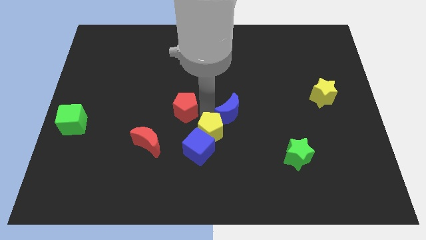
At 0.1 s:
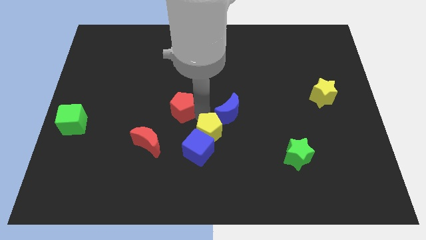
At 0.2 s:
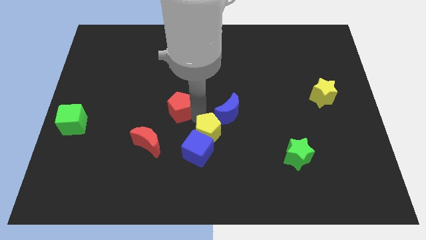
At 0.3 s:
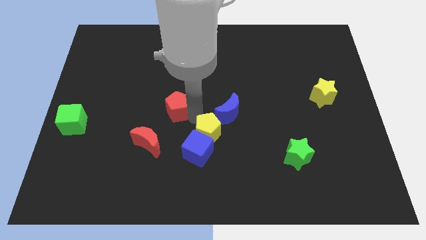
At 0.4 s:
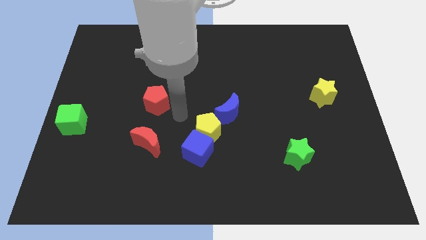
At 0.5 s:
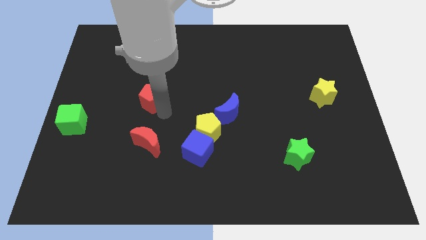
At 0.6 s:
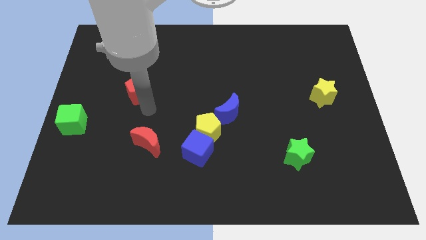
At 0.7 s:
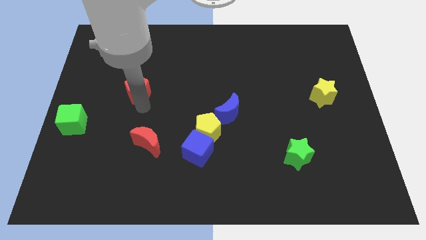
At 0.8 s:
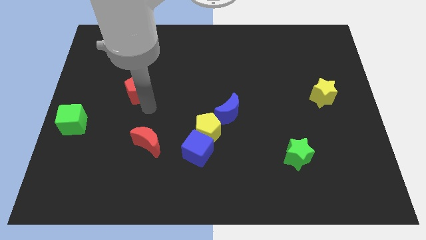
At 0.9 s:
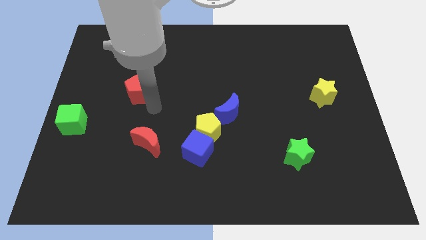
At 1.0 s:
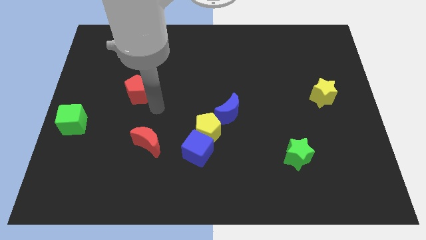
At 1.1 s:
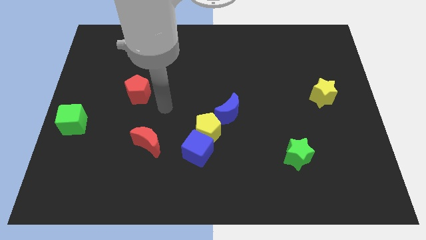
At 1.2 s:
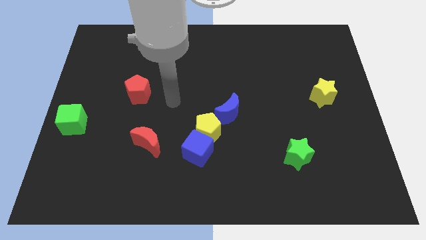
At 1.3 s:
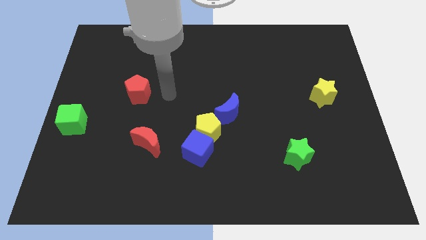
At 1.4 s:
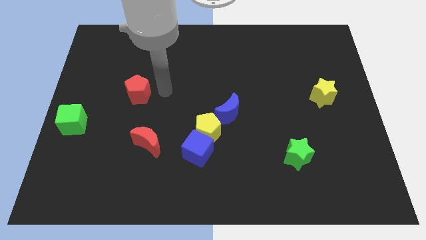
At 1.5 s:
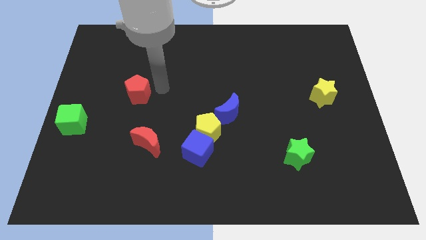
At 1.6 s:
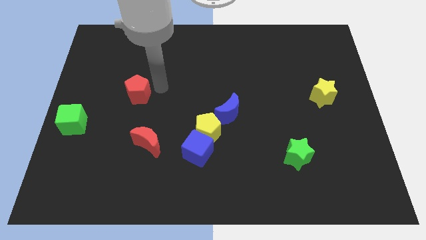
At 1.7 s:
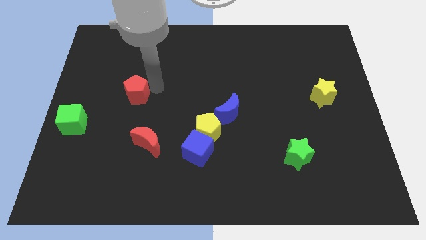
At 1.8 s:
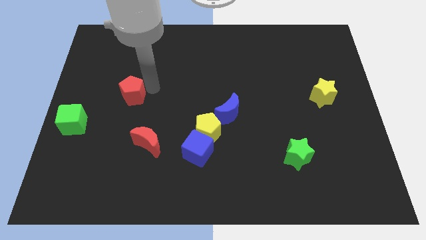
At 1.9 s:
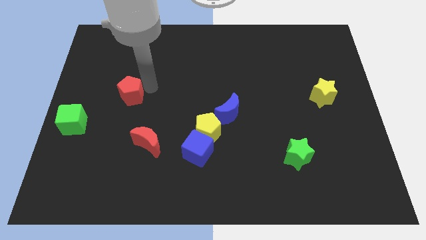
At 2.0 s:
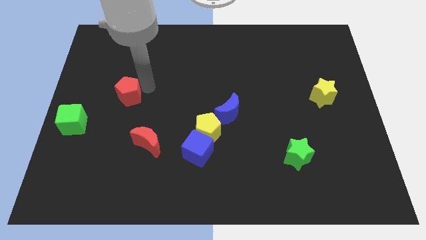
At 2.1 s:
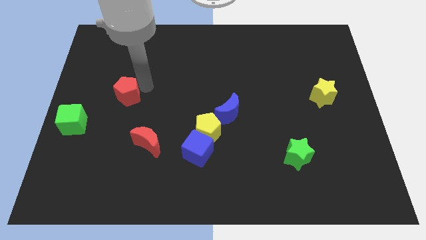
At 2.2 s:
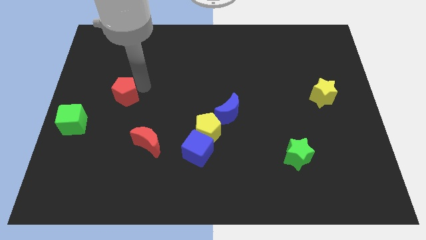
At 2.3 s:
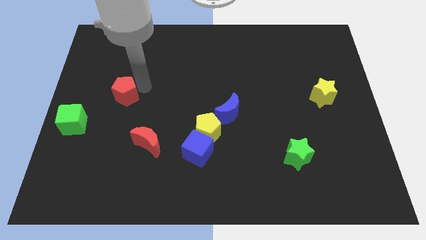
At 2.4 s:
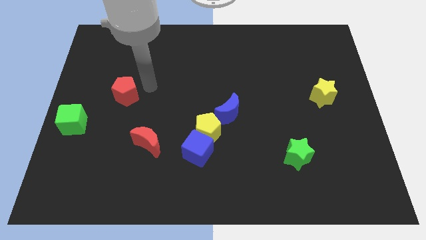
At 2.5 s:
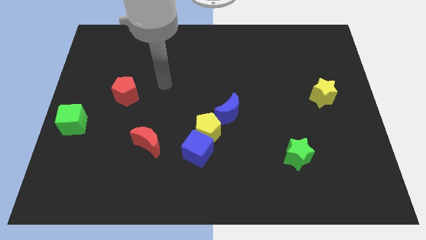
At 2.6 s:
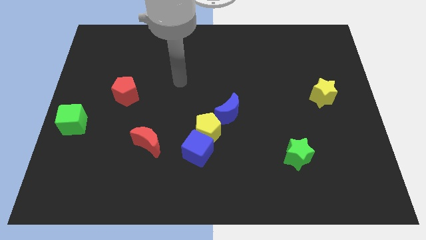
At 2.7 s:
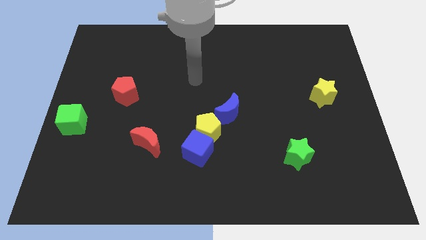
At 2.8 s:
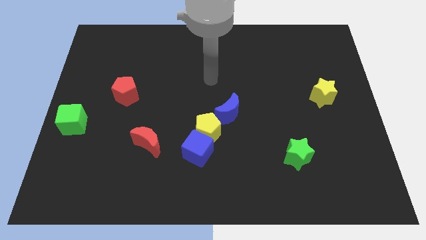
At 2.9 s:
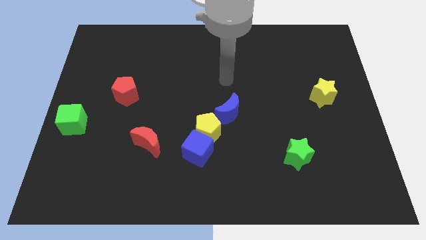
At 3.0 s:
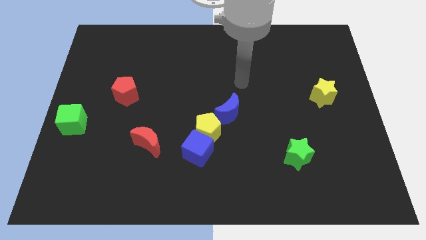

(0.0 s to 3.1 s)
slide red pentagon to top right of green cube

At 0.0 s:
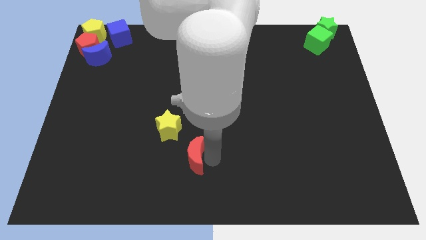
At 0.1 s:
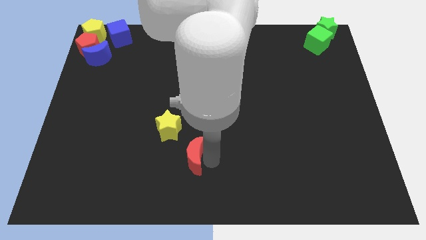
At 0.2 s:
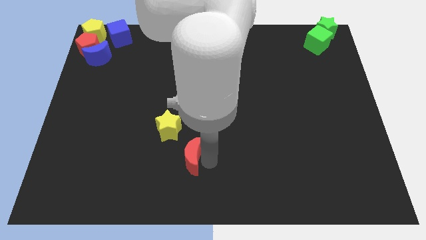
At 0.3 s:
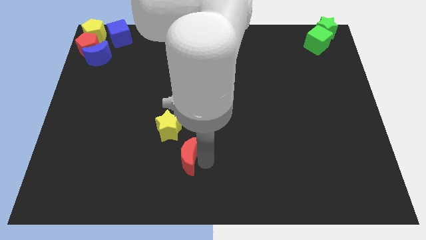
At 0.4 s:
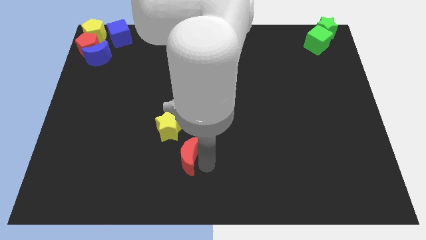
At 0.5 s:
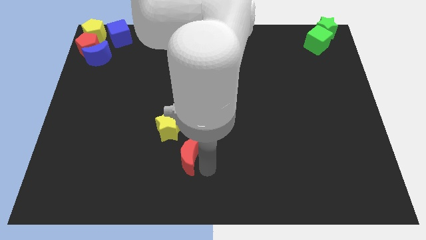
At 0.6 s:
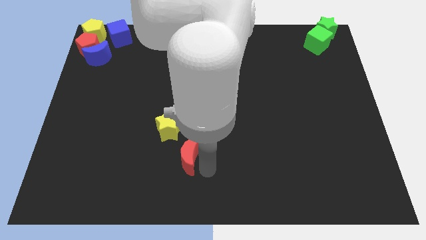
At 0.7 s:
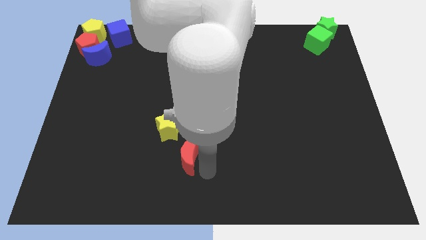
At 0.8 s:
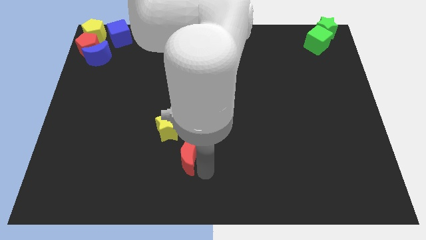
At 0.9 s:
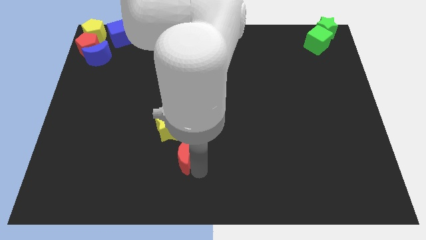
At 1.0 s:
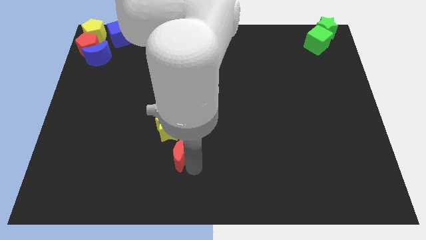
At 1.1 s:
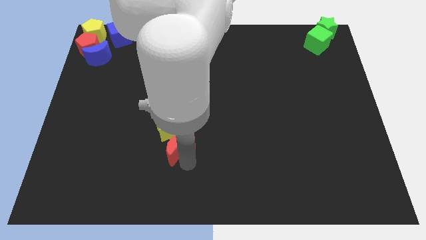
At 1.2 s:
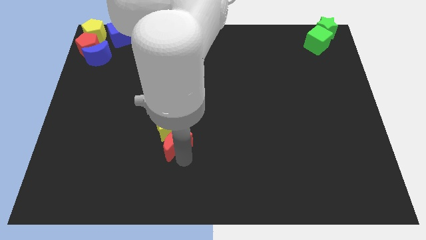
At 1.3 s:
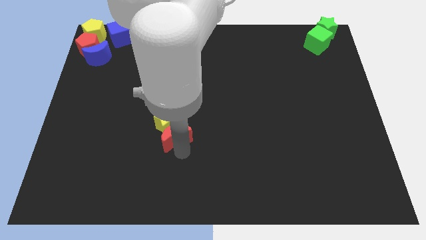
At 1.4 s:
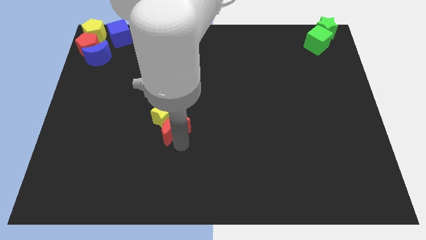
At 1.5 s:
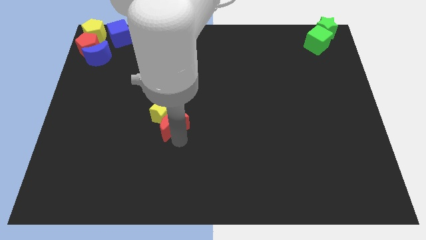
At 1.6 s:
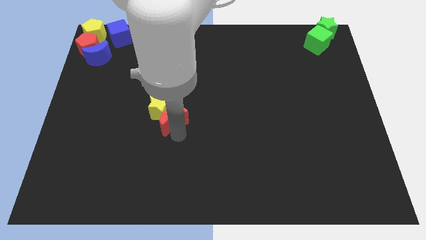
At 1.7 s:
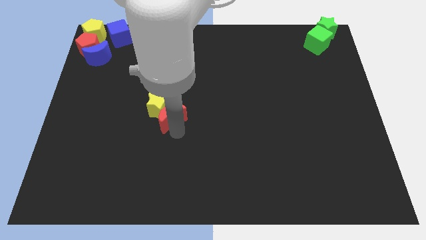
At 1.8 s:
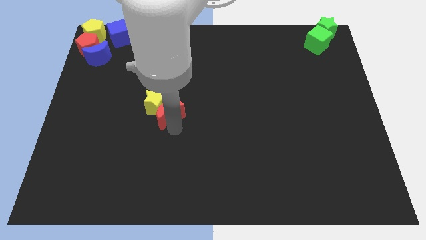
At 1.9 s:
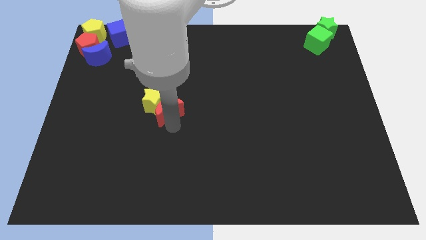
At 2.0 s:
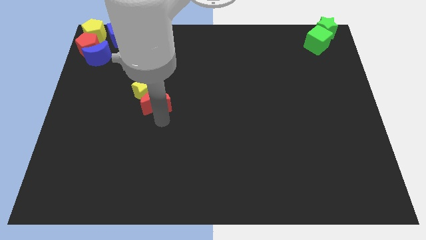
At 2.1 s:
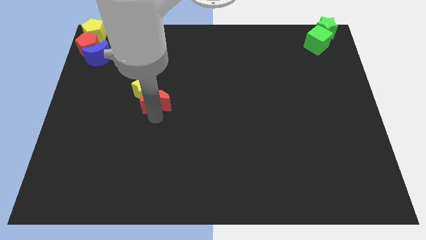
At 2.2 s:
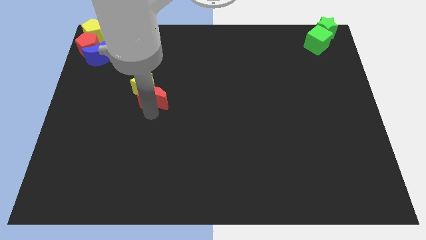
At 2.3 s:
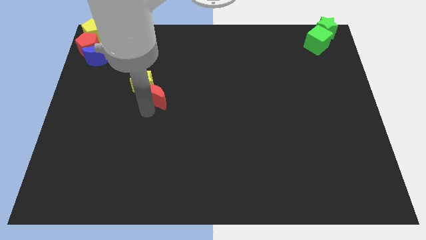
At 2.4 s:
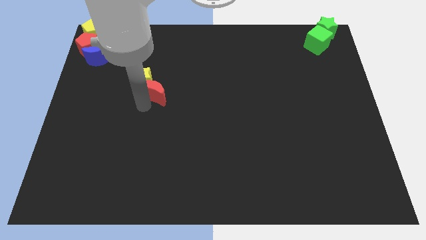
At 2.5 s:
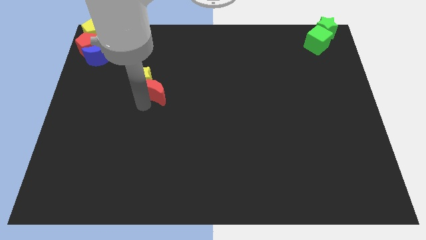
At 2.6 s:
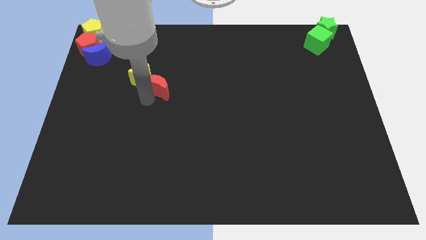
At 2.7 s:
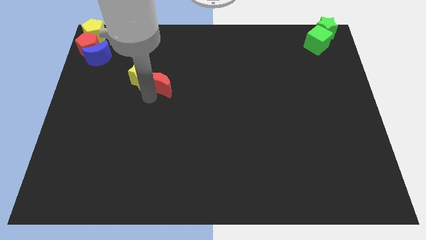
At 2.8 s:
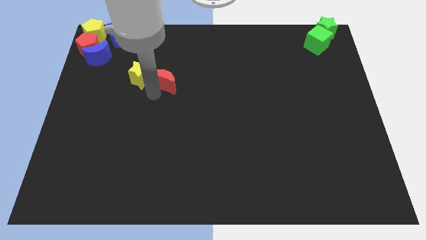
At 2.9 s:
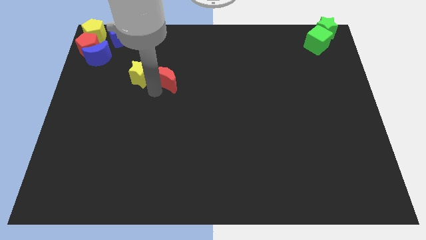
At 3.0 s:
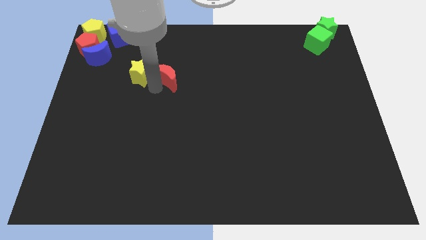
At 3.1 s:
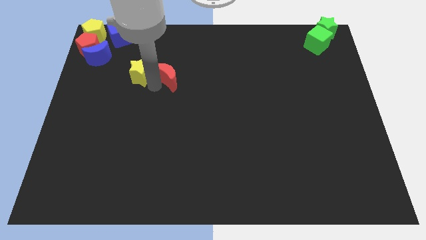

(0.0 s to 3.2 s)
move the red crescent and yellow star towards the group of blocks

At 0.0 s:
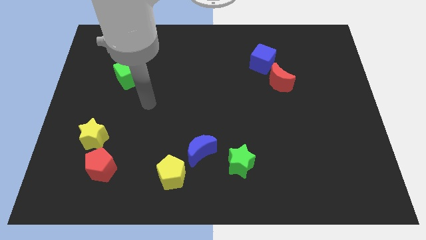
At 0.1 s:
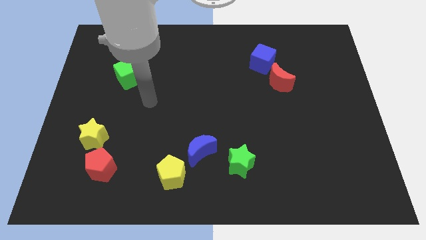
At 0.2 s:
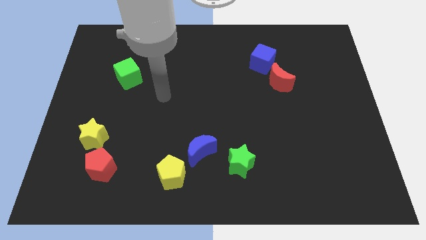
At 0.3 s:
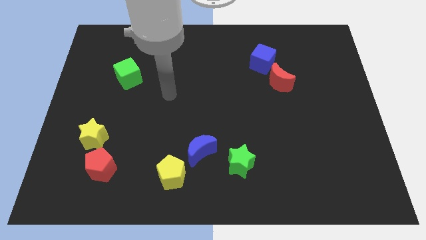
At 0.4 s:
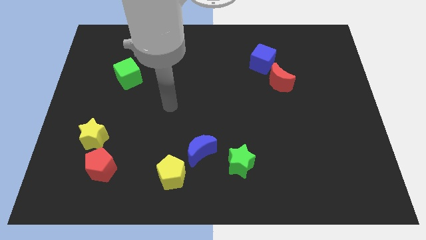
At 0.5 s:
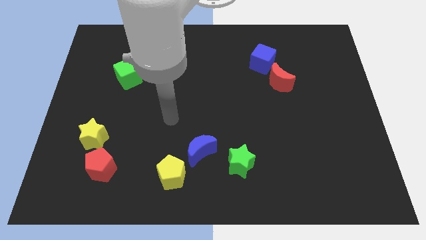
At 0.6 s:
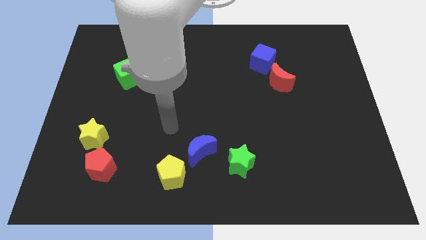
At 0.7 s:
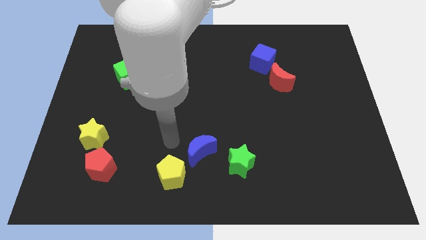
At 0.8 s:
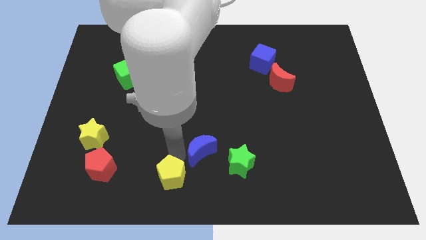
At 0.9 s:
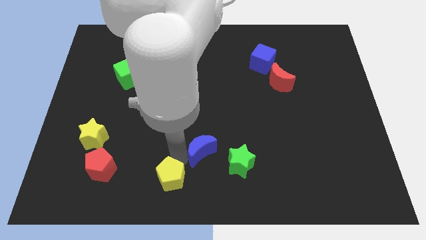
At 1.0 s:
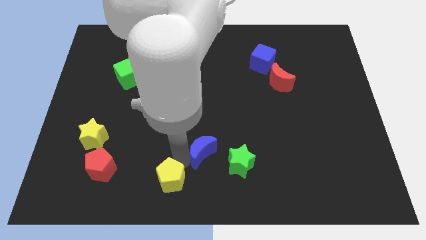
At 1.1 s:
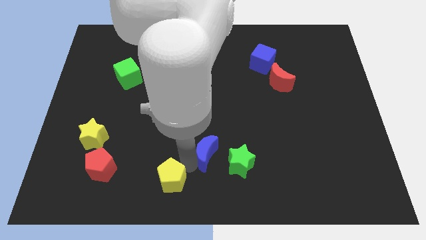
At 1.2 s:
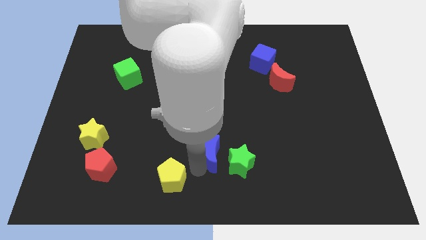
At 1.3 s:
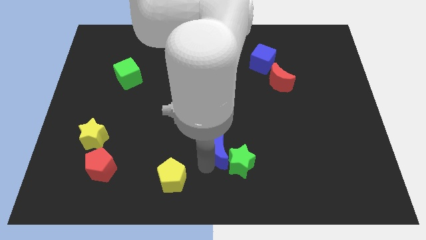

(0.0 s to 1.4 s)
slide the blue moon towards the right

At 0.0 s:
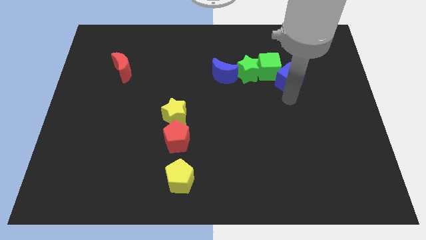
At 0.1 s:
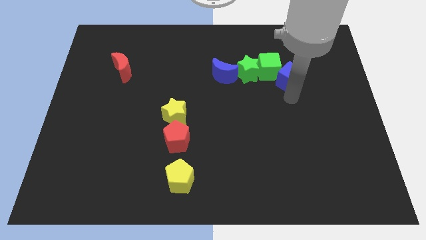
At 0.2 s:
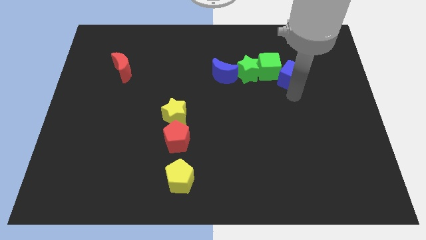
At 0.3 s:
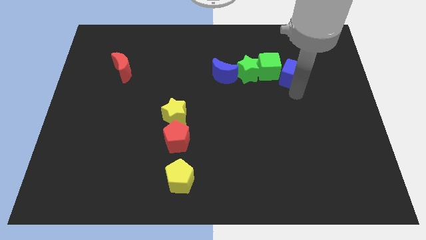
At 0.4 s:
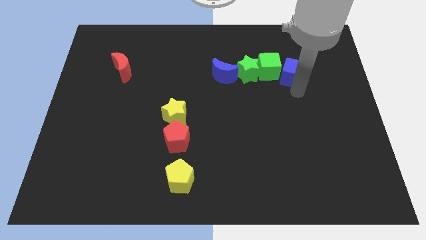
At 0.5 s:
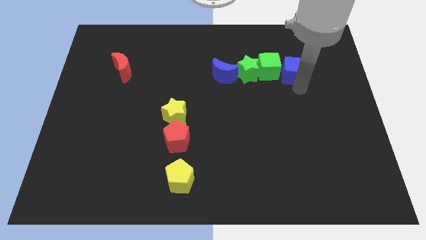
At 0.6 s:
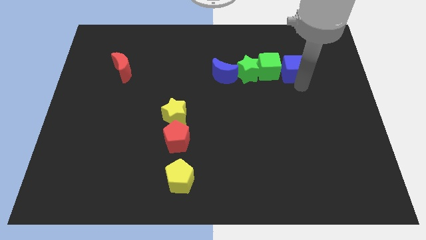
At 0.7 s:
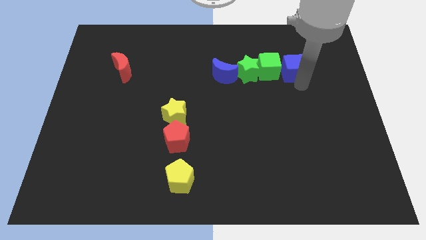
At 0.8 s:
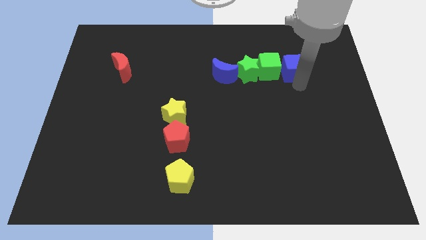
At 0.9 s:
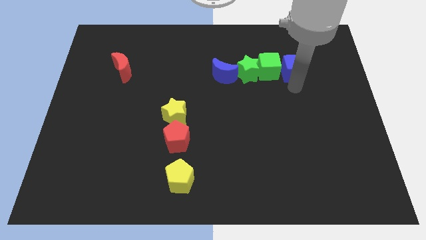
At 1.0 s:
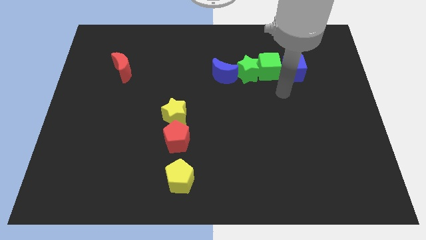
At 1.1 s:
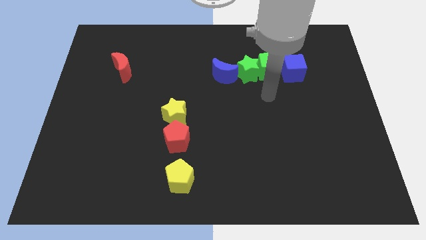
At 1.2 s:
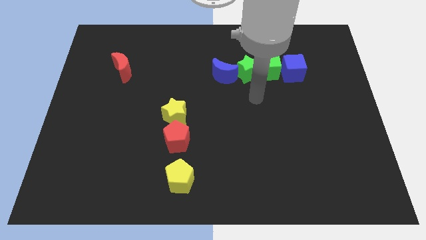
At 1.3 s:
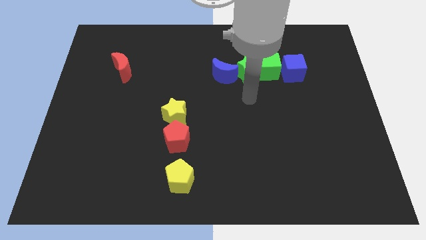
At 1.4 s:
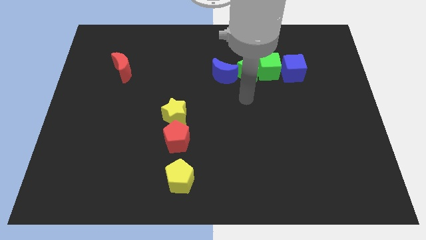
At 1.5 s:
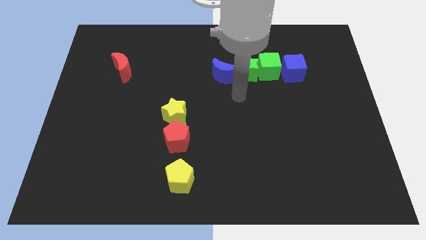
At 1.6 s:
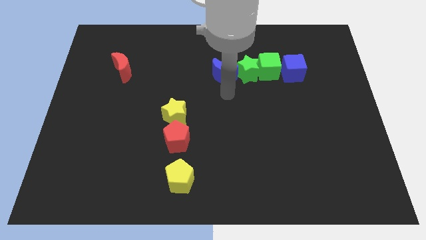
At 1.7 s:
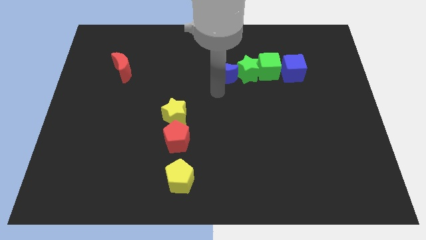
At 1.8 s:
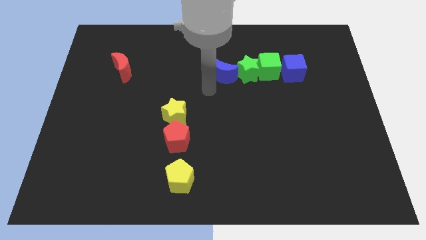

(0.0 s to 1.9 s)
place the blue cube right side of the green cube
